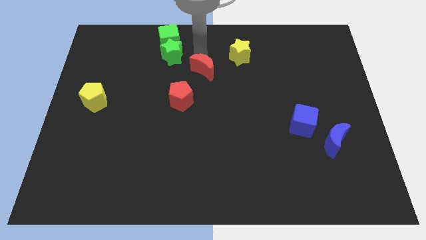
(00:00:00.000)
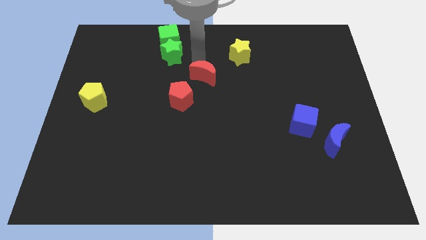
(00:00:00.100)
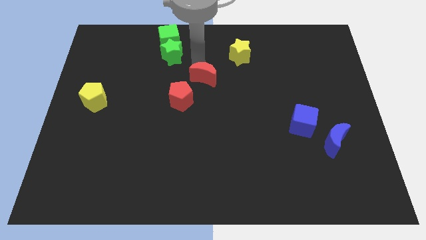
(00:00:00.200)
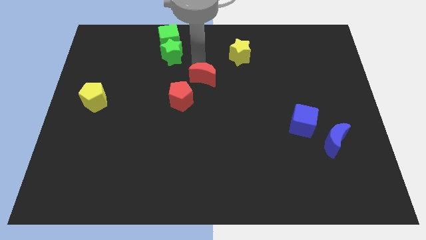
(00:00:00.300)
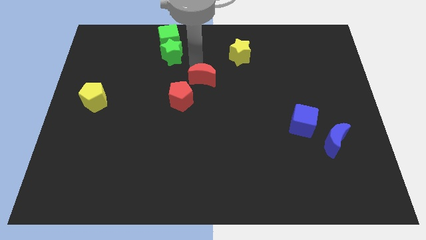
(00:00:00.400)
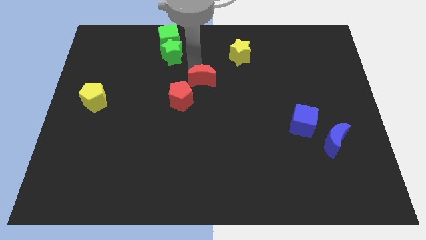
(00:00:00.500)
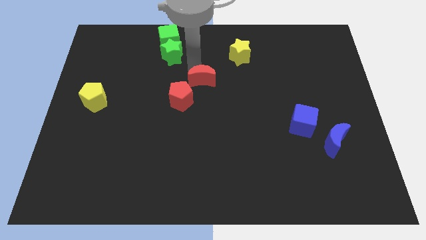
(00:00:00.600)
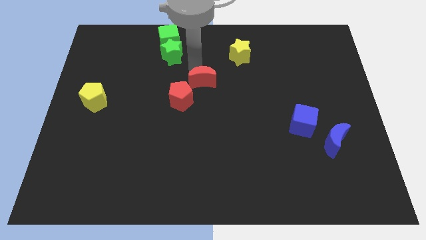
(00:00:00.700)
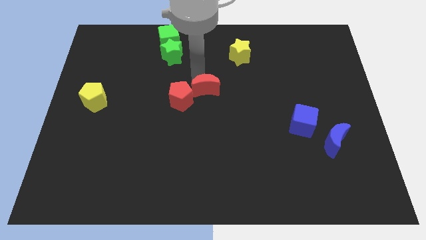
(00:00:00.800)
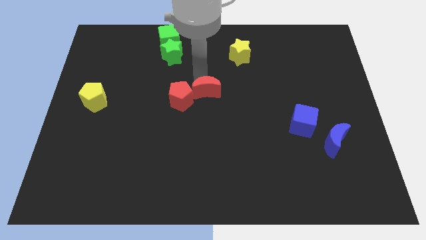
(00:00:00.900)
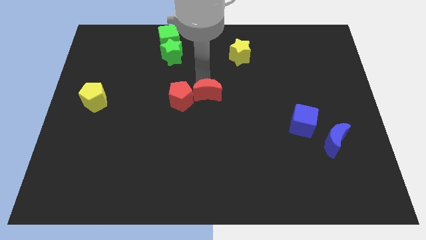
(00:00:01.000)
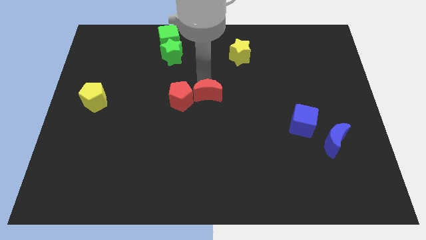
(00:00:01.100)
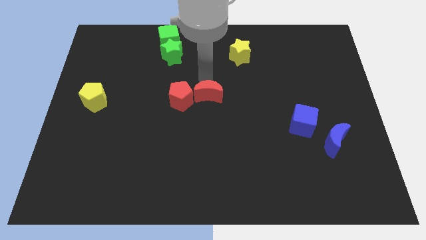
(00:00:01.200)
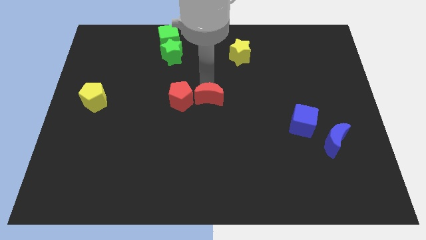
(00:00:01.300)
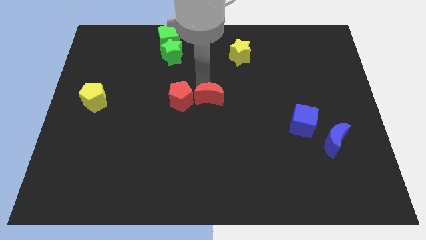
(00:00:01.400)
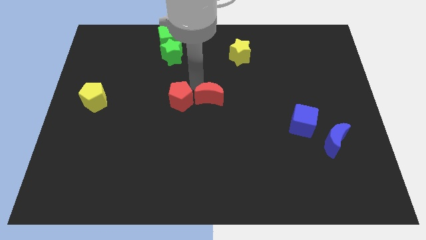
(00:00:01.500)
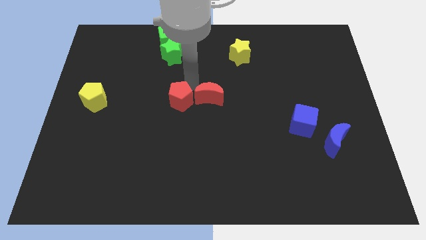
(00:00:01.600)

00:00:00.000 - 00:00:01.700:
slide the red moon horizontally to the right side of the red pentagon

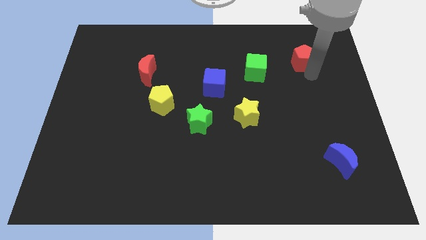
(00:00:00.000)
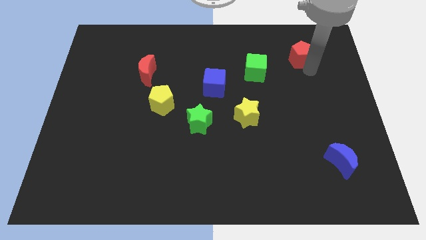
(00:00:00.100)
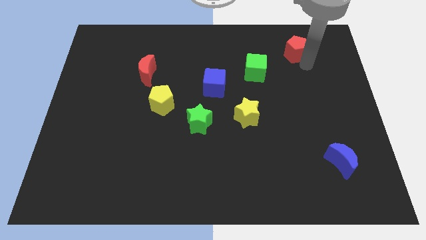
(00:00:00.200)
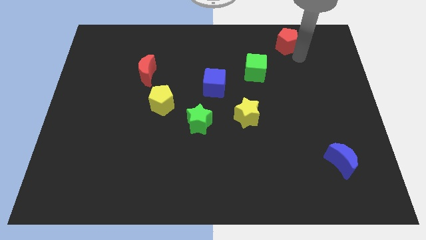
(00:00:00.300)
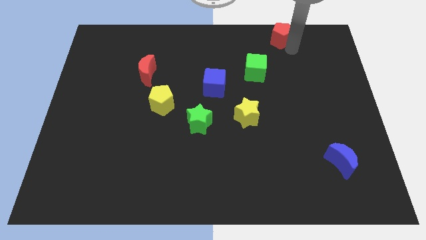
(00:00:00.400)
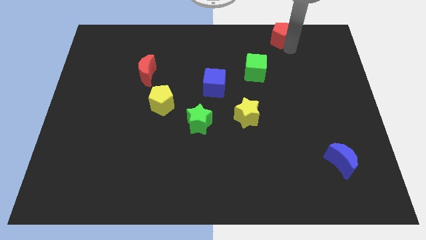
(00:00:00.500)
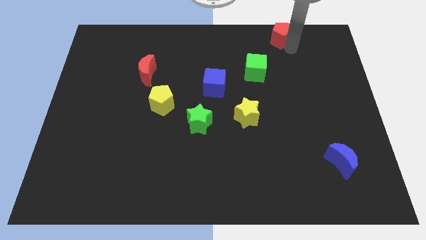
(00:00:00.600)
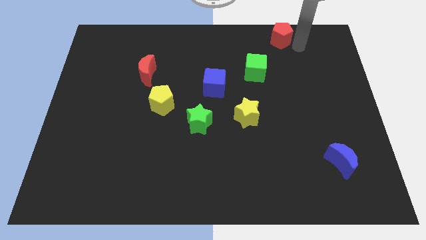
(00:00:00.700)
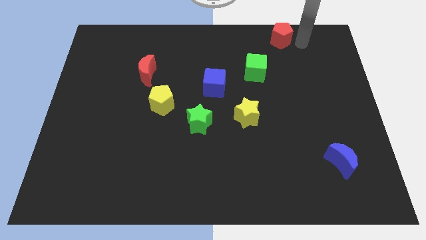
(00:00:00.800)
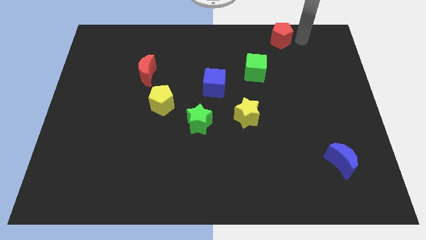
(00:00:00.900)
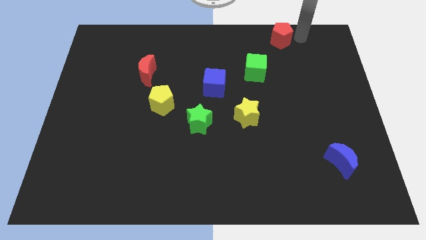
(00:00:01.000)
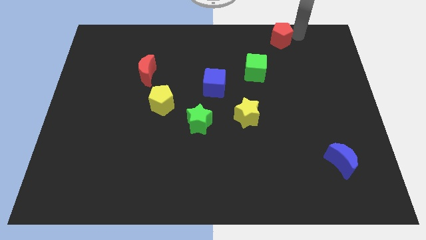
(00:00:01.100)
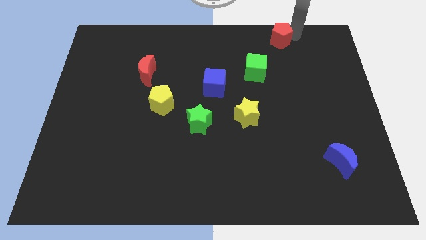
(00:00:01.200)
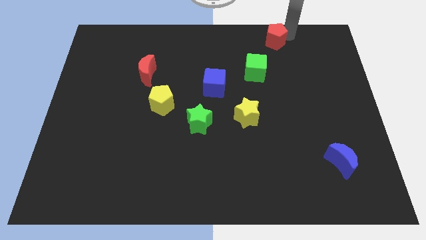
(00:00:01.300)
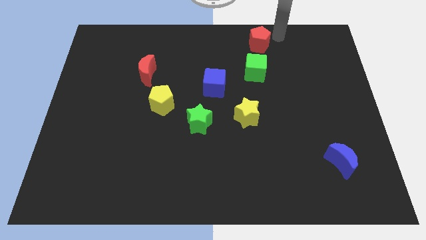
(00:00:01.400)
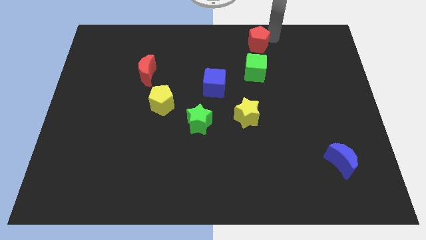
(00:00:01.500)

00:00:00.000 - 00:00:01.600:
place the red pentagon on top green cube

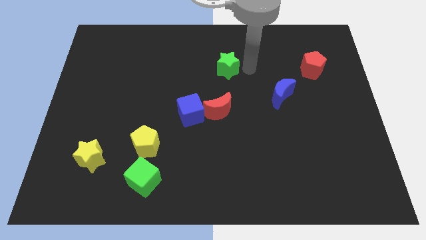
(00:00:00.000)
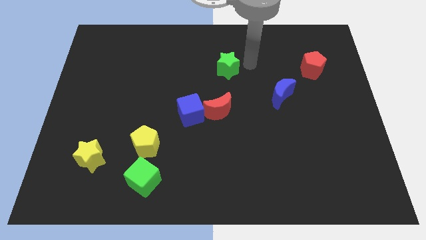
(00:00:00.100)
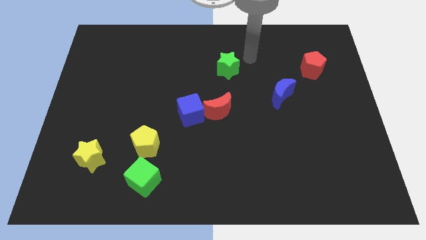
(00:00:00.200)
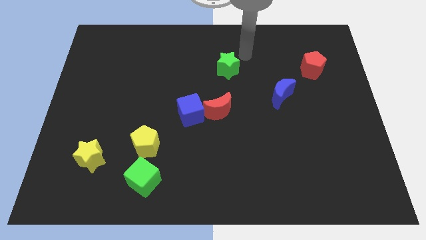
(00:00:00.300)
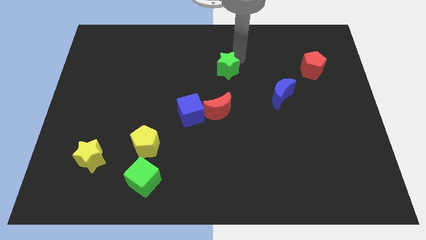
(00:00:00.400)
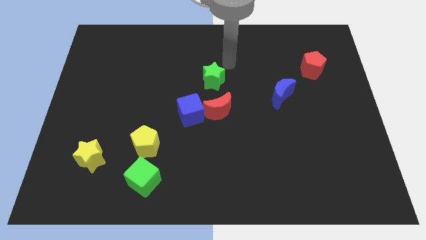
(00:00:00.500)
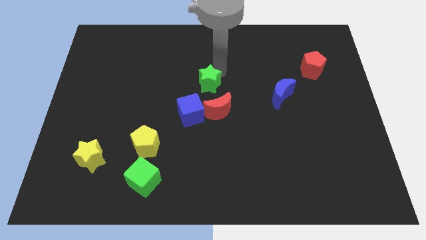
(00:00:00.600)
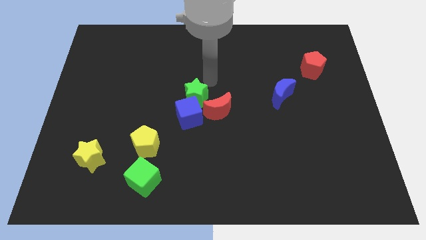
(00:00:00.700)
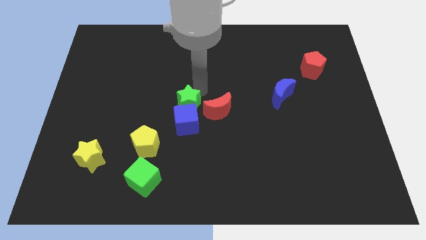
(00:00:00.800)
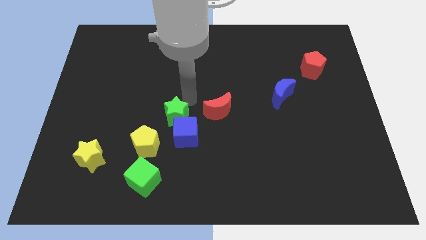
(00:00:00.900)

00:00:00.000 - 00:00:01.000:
push the green star into the blue cube

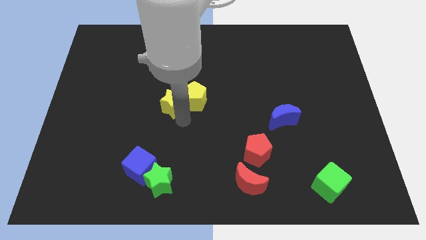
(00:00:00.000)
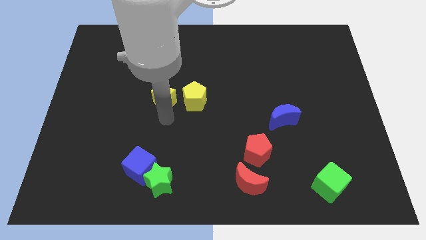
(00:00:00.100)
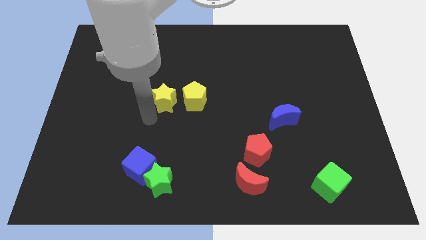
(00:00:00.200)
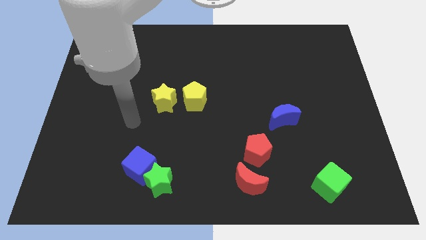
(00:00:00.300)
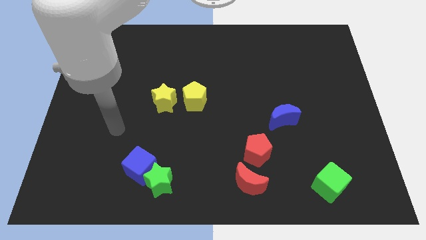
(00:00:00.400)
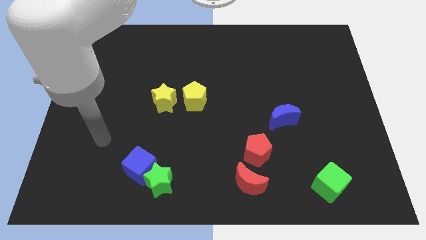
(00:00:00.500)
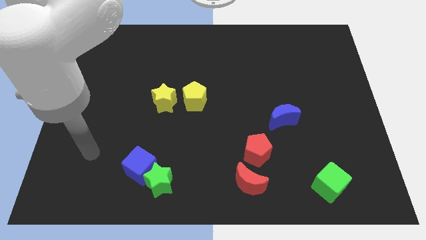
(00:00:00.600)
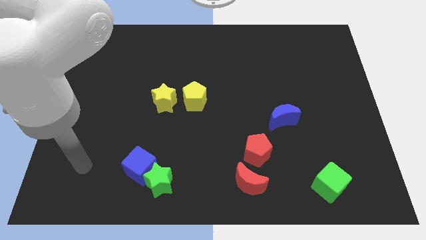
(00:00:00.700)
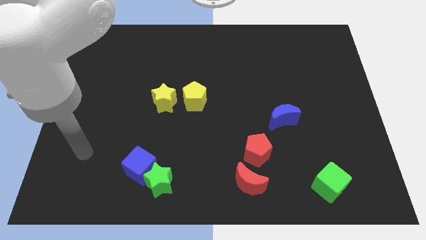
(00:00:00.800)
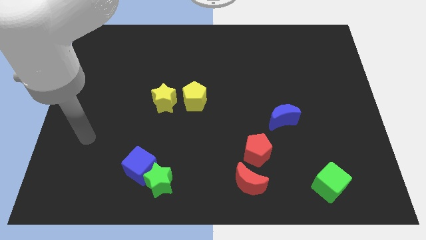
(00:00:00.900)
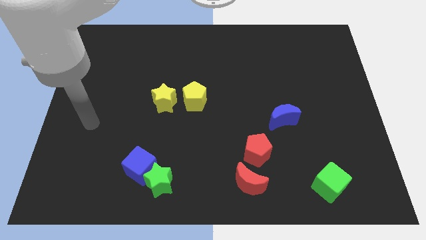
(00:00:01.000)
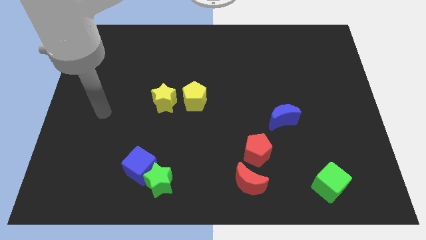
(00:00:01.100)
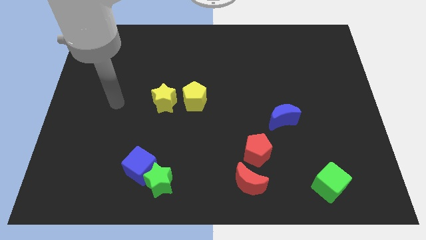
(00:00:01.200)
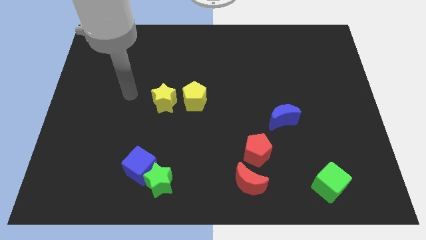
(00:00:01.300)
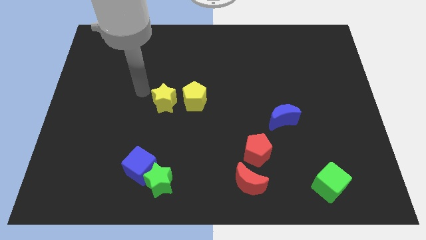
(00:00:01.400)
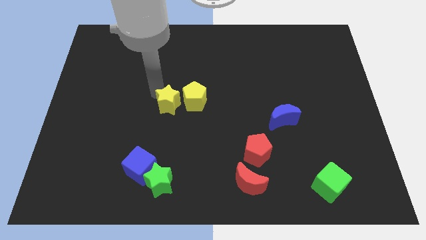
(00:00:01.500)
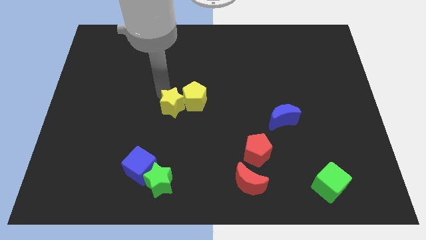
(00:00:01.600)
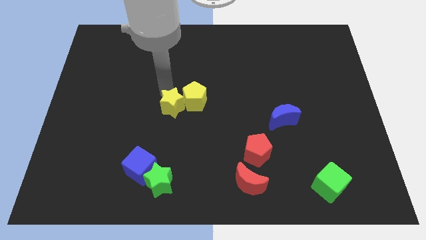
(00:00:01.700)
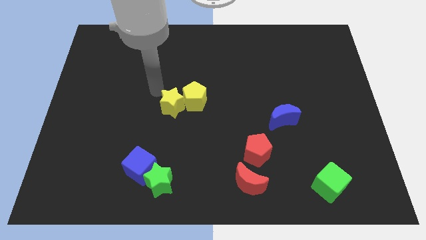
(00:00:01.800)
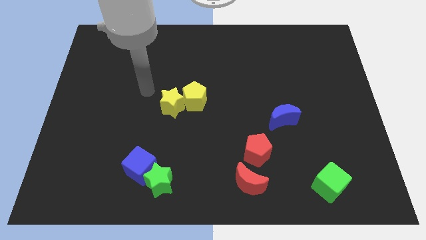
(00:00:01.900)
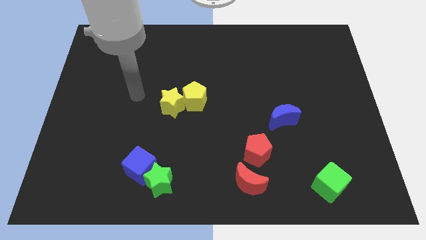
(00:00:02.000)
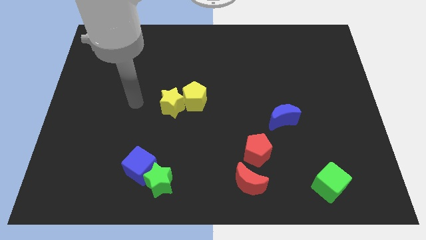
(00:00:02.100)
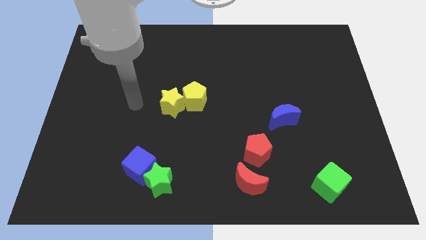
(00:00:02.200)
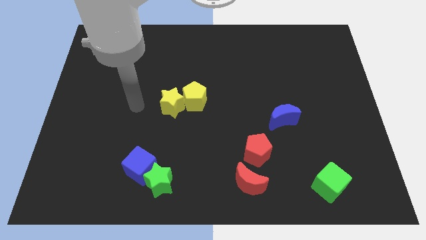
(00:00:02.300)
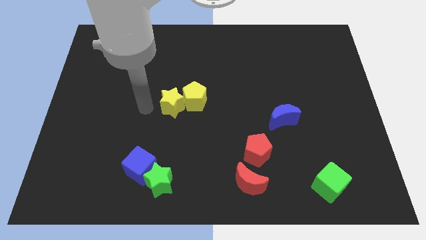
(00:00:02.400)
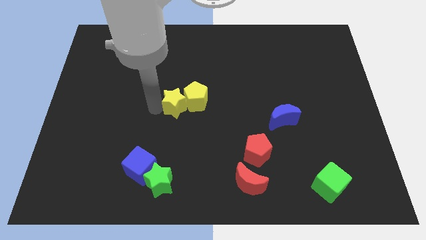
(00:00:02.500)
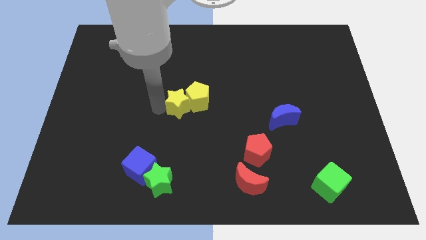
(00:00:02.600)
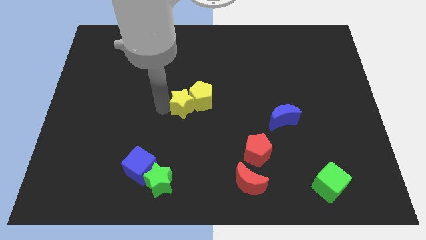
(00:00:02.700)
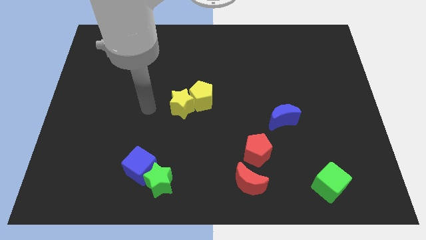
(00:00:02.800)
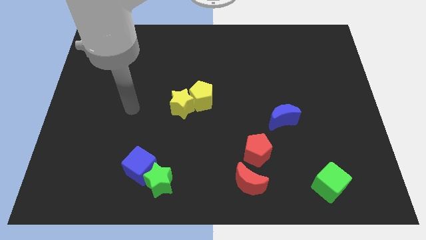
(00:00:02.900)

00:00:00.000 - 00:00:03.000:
push the yellow star and the yellow pentagon towards right side

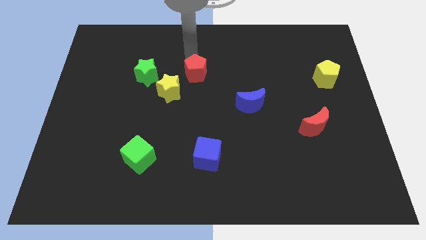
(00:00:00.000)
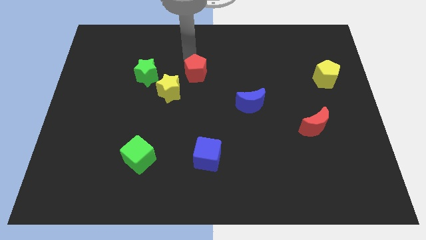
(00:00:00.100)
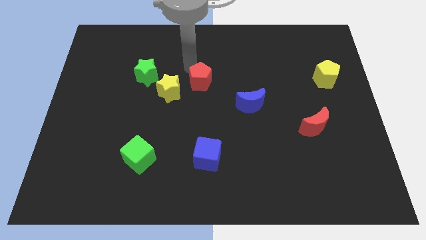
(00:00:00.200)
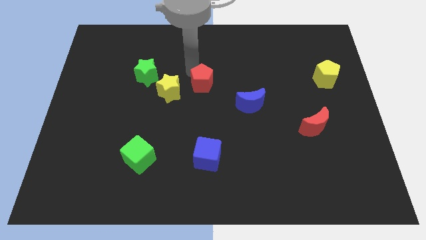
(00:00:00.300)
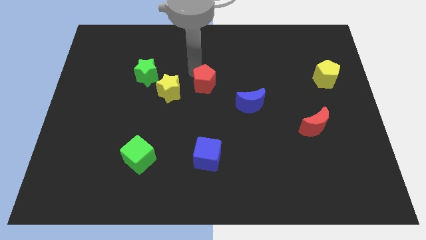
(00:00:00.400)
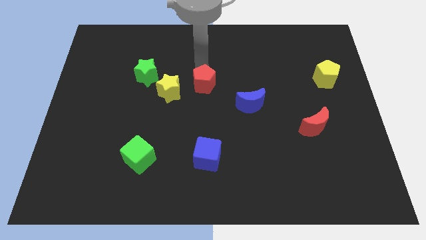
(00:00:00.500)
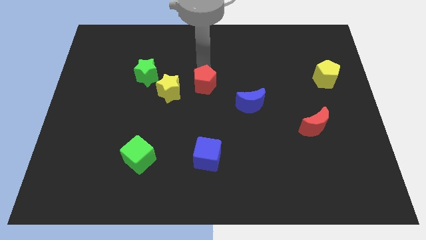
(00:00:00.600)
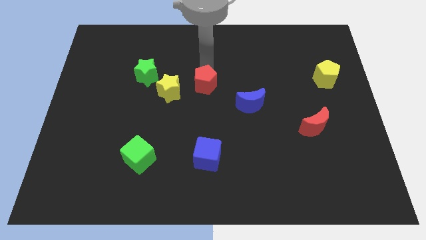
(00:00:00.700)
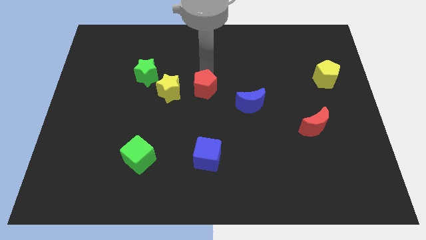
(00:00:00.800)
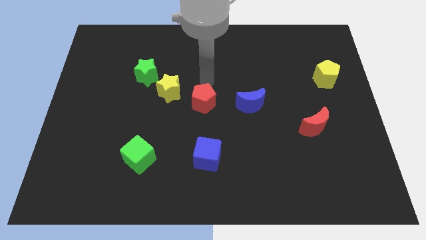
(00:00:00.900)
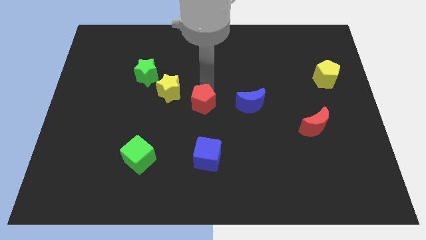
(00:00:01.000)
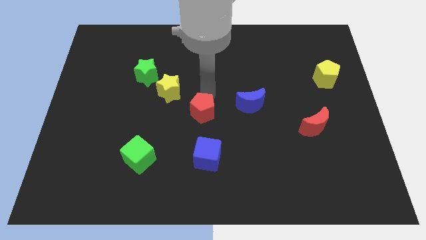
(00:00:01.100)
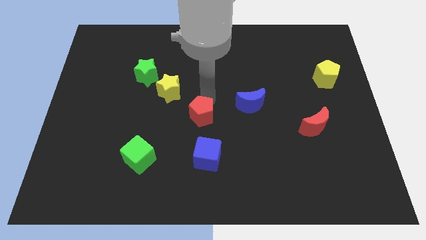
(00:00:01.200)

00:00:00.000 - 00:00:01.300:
push the red pentagon towards the blue cube

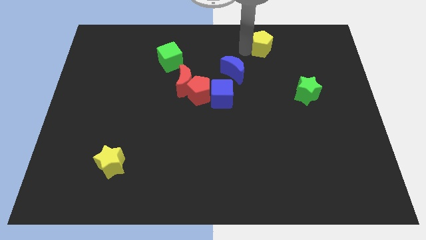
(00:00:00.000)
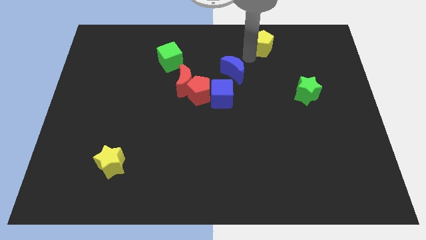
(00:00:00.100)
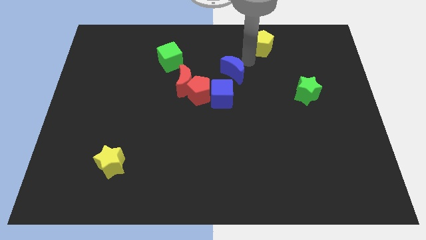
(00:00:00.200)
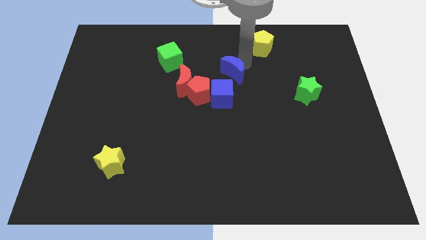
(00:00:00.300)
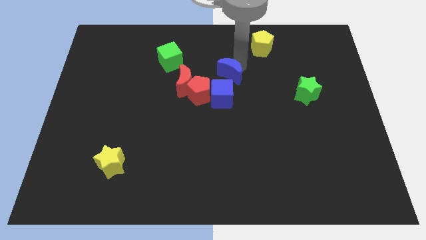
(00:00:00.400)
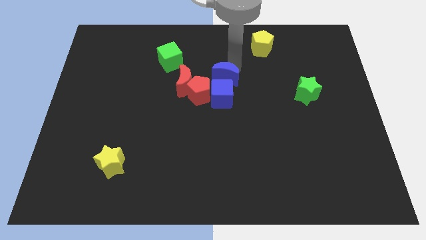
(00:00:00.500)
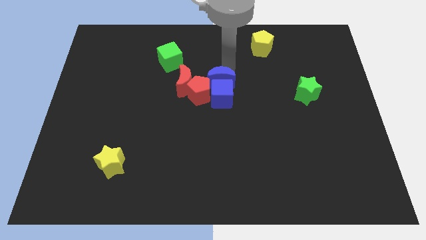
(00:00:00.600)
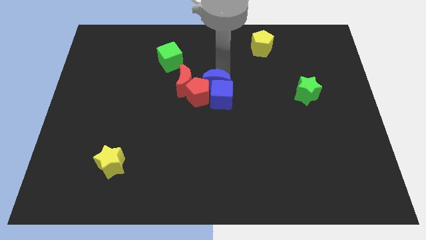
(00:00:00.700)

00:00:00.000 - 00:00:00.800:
push blue crescent towards blue cube
